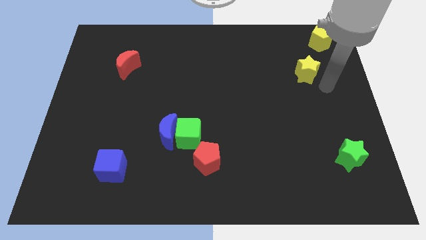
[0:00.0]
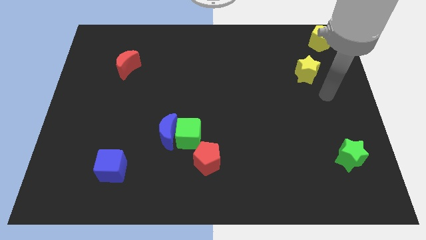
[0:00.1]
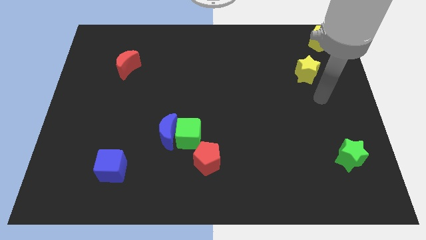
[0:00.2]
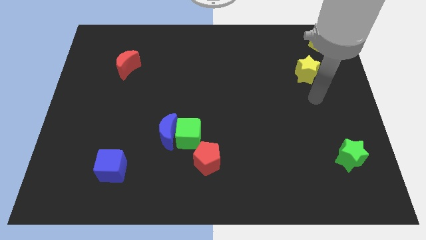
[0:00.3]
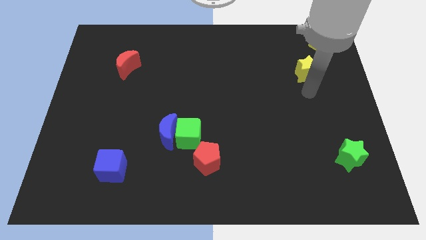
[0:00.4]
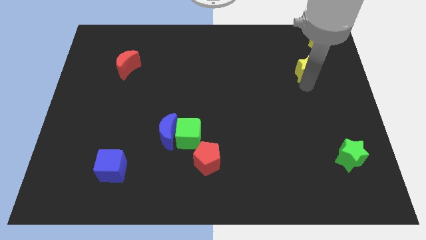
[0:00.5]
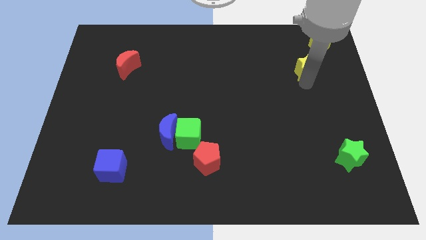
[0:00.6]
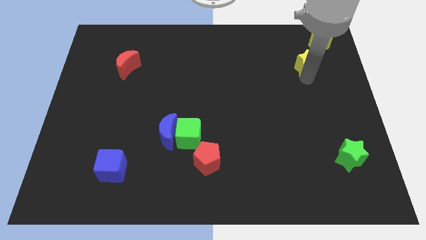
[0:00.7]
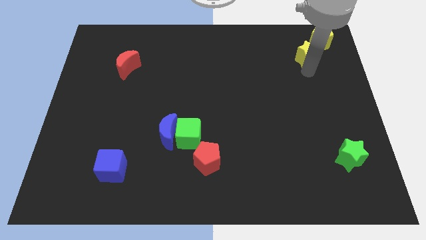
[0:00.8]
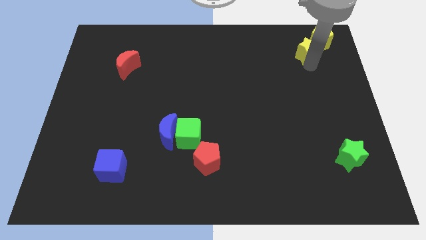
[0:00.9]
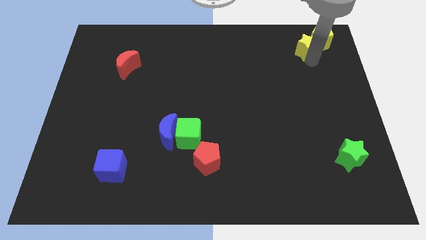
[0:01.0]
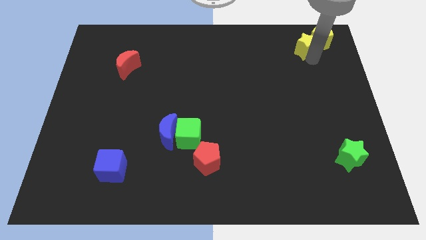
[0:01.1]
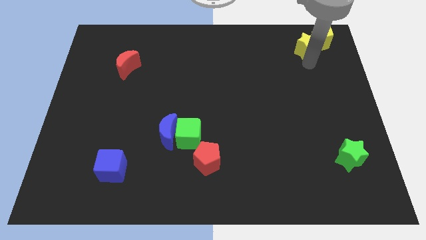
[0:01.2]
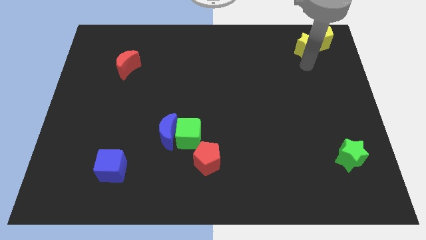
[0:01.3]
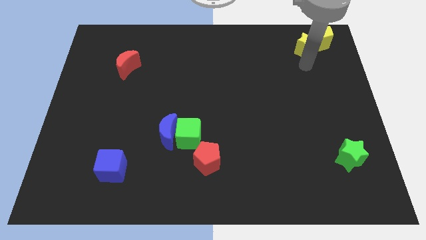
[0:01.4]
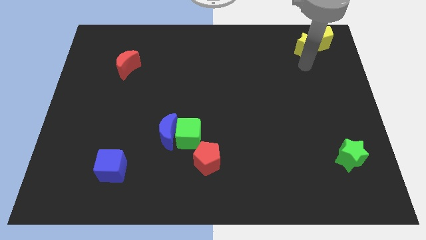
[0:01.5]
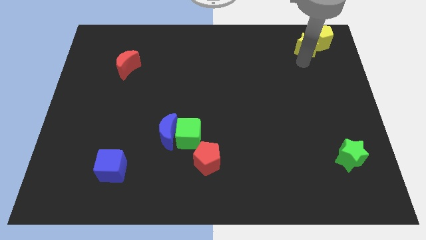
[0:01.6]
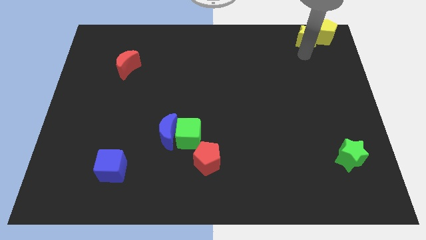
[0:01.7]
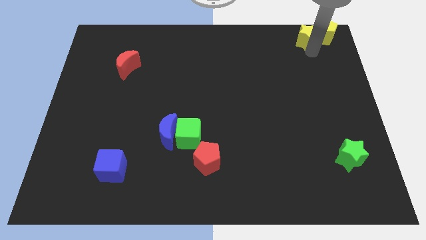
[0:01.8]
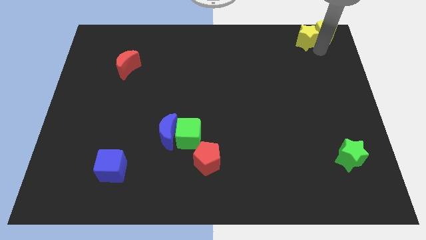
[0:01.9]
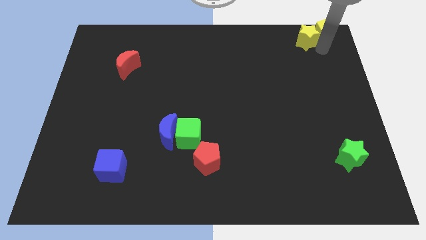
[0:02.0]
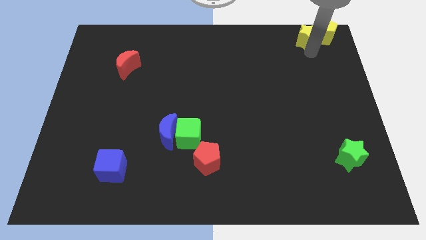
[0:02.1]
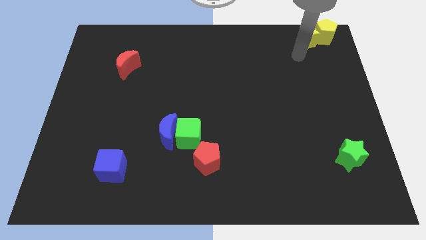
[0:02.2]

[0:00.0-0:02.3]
push the yellow star into the yellow pentagon at the top

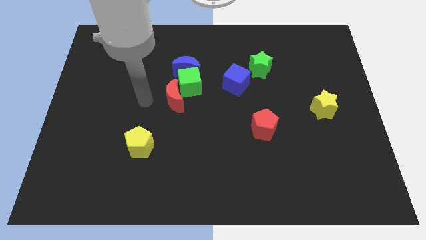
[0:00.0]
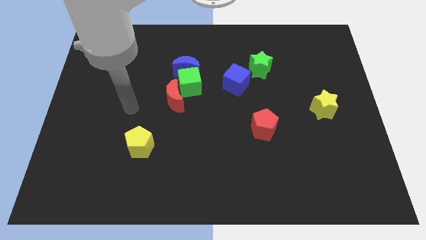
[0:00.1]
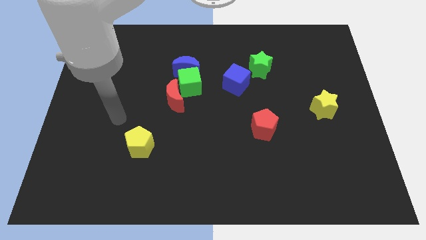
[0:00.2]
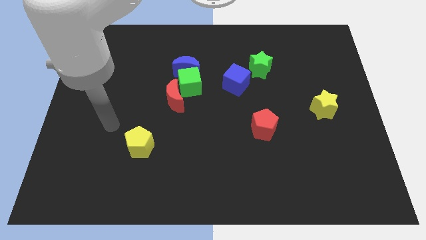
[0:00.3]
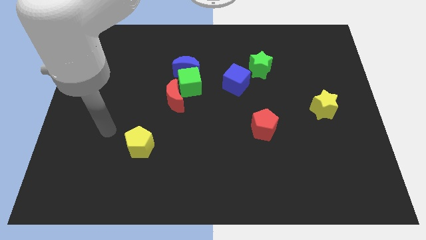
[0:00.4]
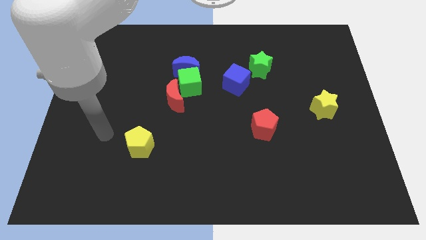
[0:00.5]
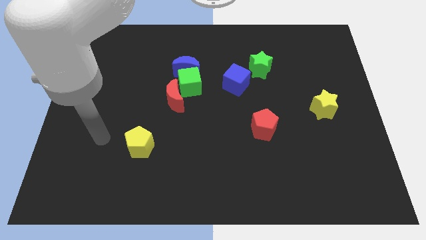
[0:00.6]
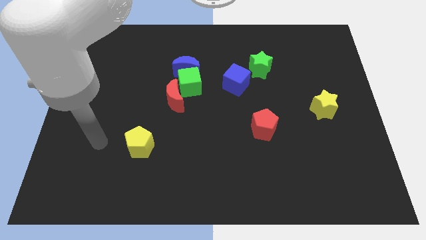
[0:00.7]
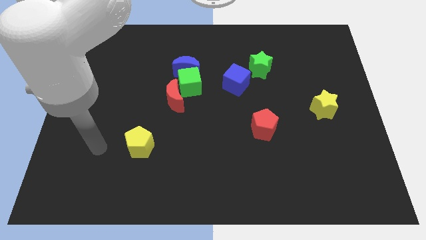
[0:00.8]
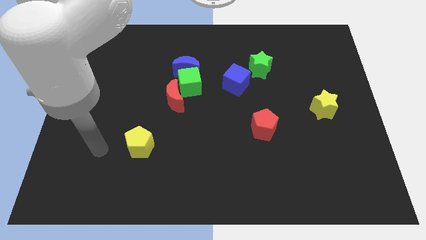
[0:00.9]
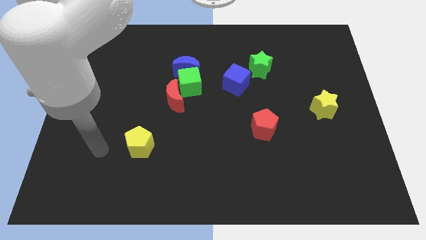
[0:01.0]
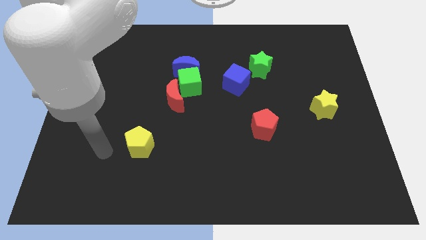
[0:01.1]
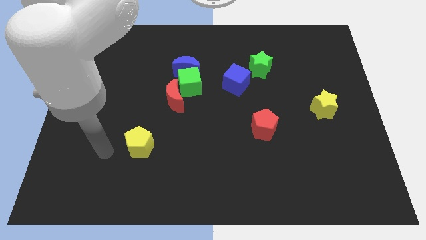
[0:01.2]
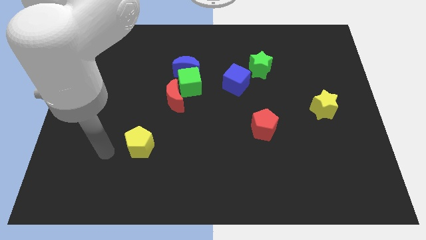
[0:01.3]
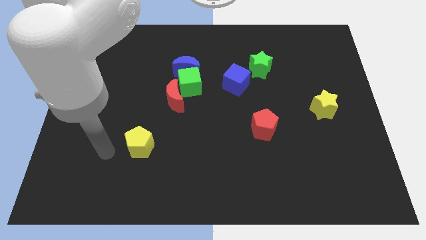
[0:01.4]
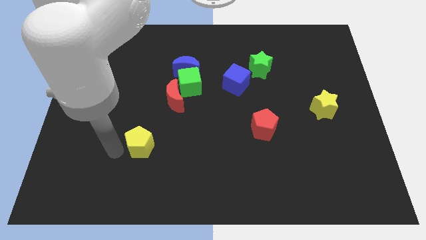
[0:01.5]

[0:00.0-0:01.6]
move your arm to the left side of the yellow pentagon

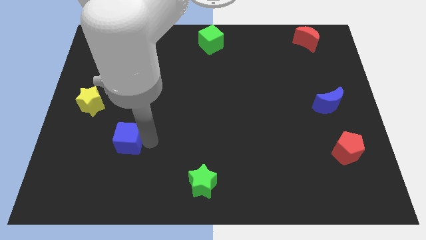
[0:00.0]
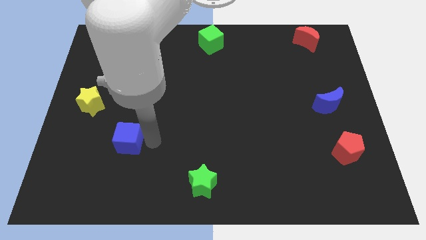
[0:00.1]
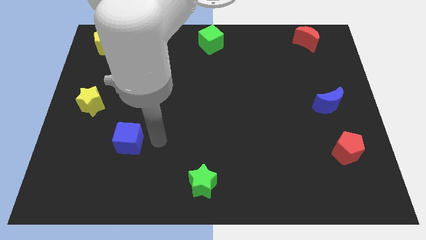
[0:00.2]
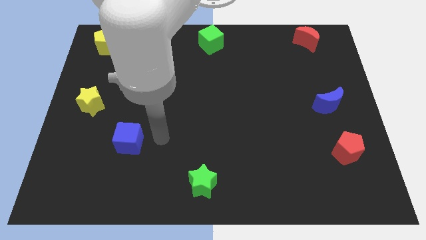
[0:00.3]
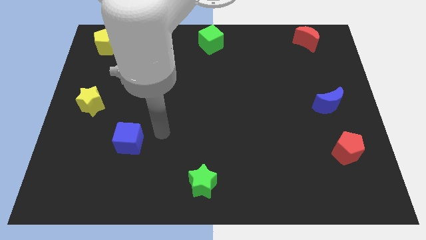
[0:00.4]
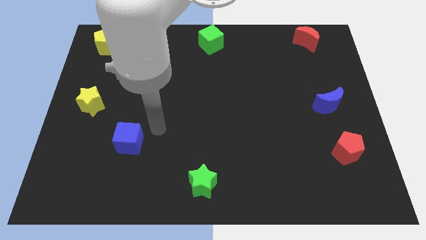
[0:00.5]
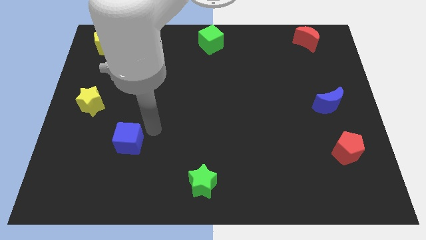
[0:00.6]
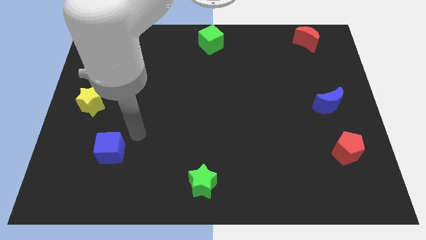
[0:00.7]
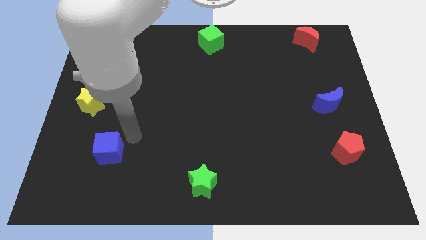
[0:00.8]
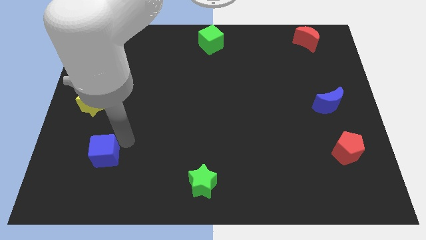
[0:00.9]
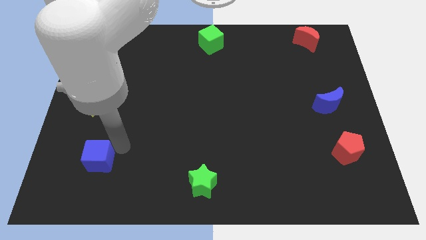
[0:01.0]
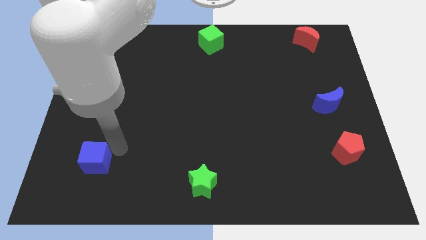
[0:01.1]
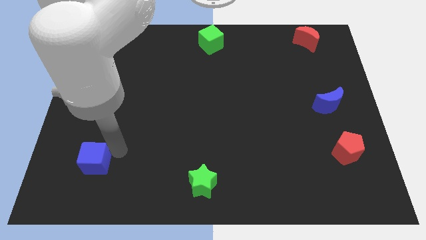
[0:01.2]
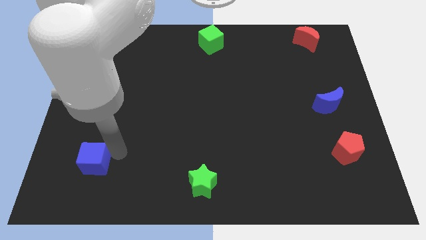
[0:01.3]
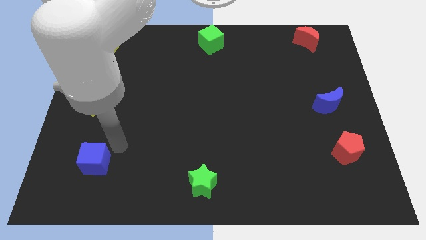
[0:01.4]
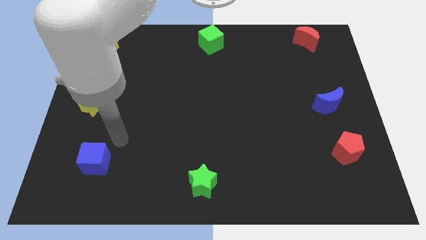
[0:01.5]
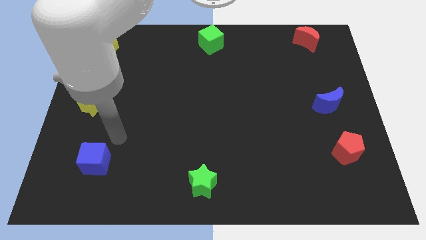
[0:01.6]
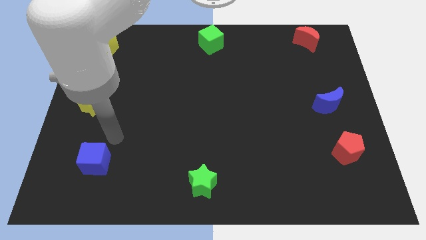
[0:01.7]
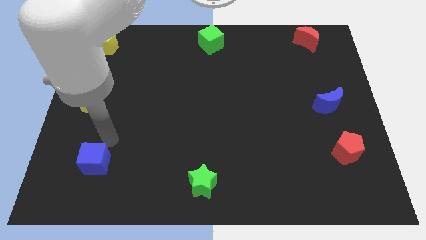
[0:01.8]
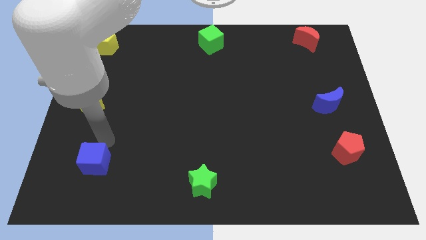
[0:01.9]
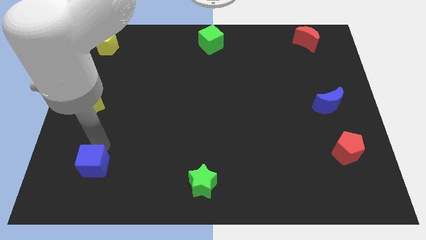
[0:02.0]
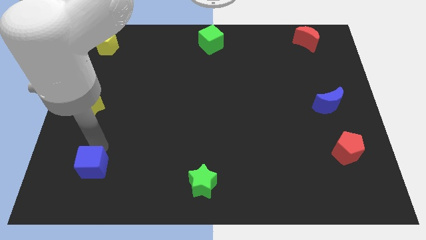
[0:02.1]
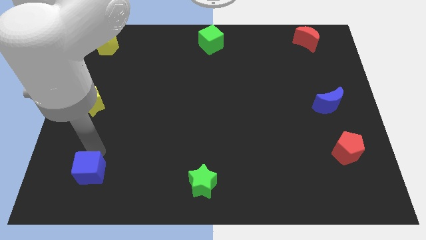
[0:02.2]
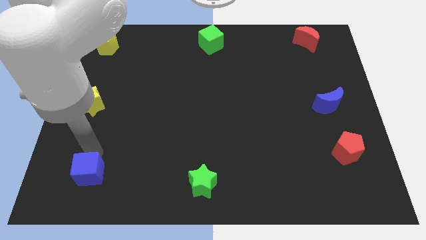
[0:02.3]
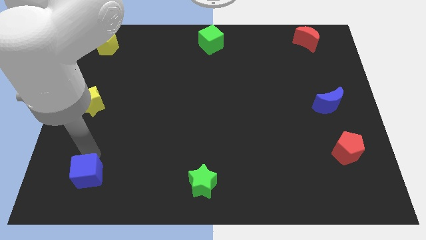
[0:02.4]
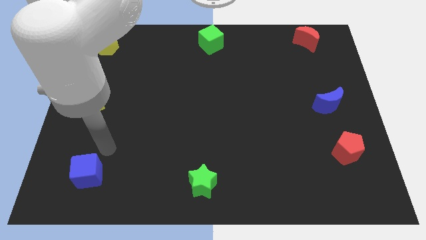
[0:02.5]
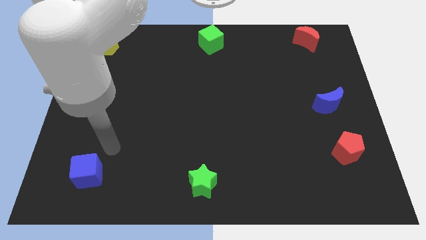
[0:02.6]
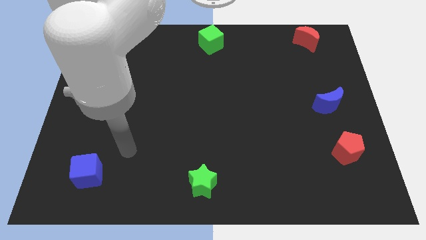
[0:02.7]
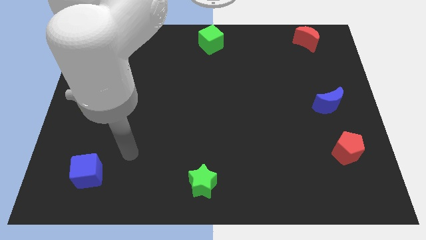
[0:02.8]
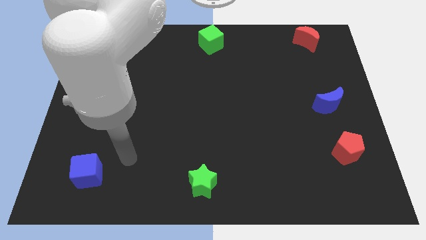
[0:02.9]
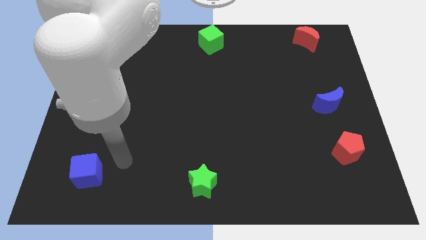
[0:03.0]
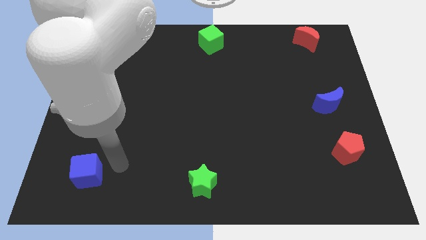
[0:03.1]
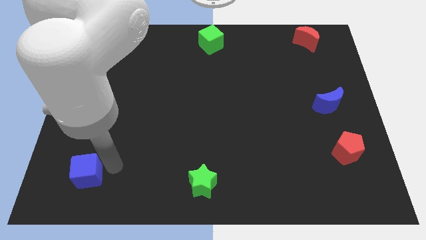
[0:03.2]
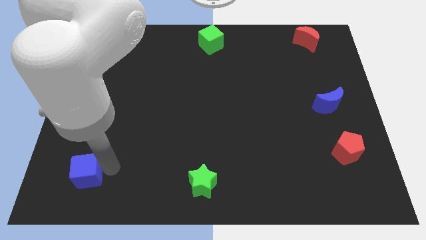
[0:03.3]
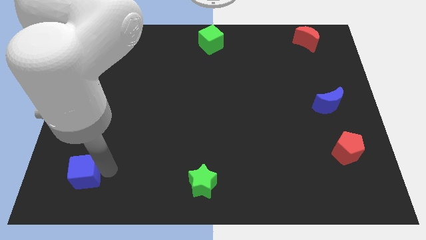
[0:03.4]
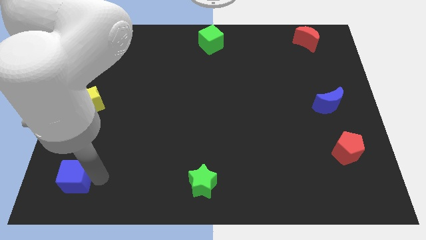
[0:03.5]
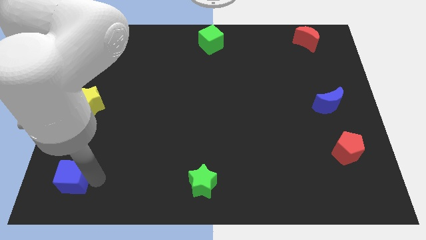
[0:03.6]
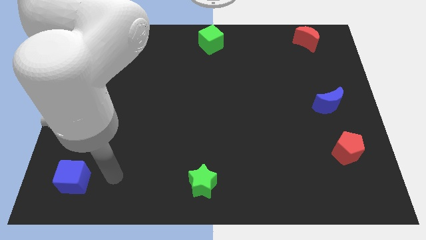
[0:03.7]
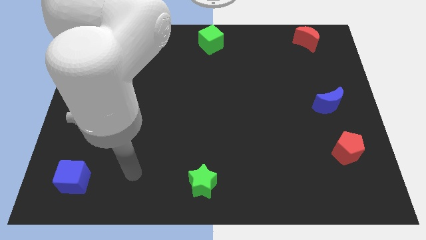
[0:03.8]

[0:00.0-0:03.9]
move the blue cube below the yellow star

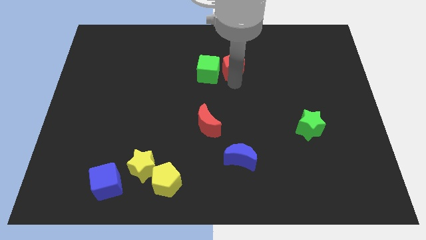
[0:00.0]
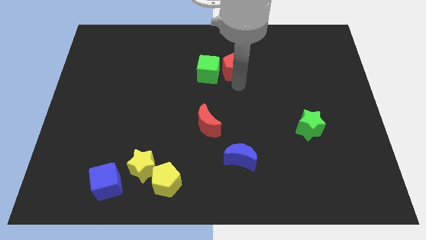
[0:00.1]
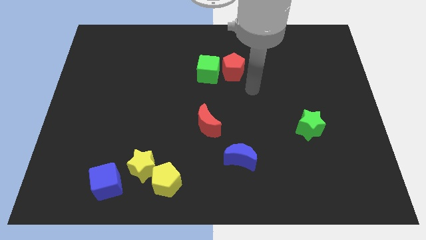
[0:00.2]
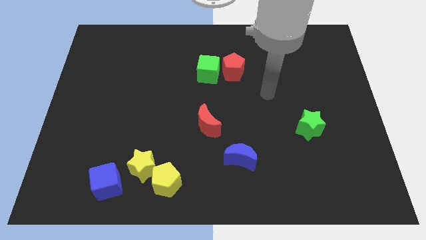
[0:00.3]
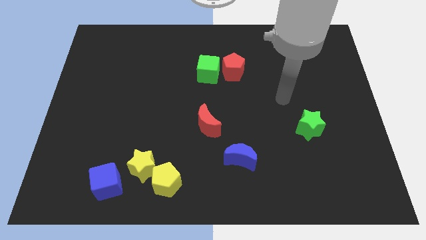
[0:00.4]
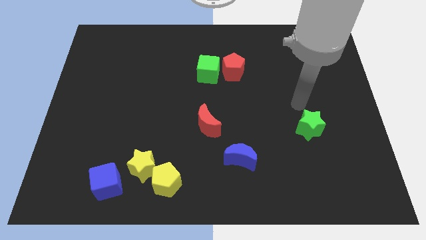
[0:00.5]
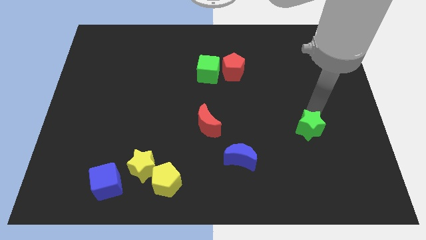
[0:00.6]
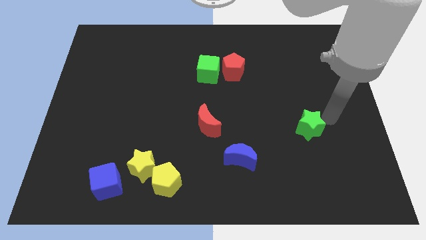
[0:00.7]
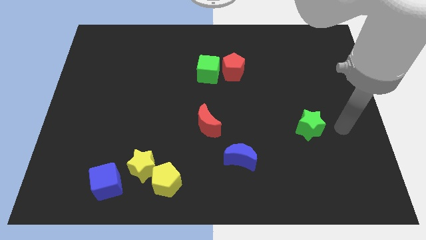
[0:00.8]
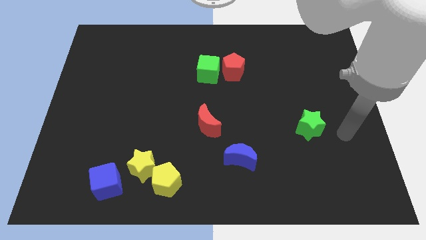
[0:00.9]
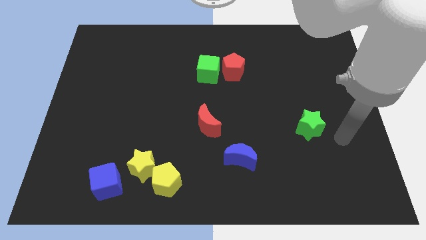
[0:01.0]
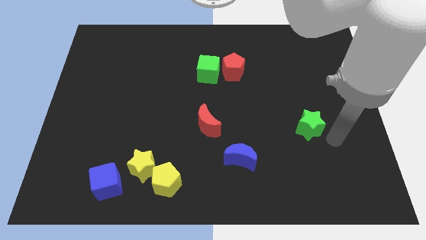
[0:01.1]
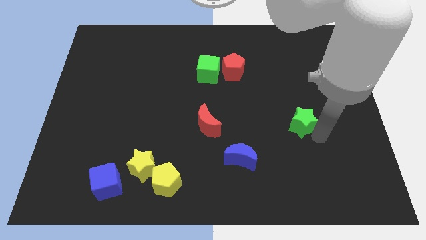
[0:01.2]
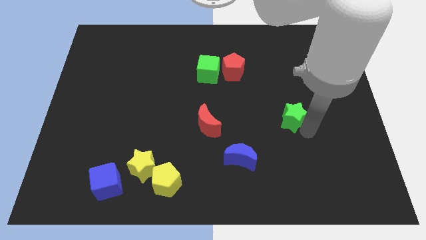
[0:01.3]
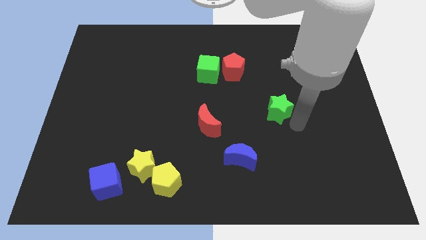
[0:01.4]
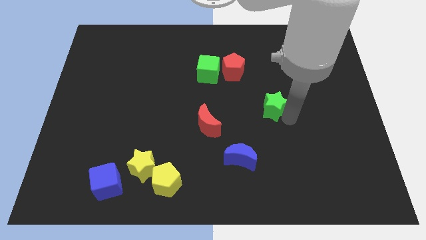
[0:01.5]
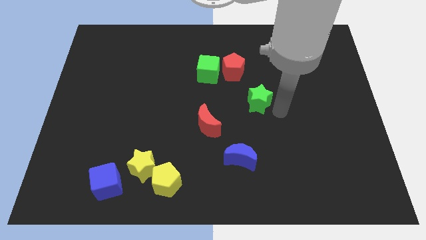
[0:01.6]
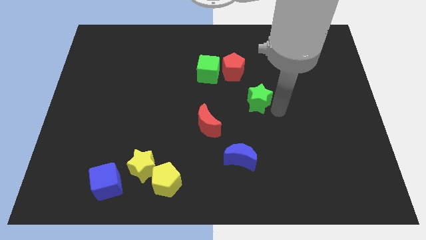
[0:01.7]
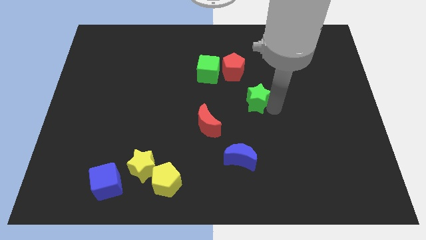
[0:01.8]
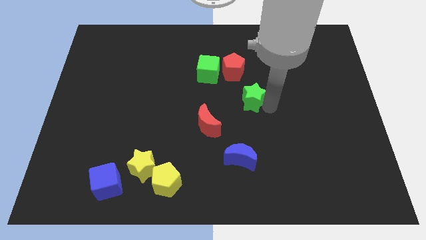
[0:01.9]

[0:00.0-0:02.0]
slightly move the green star towards the red pentagon
